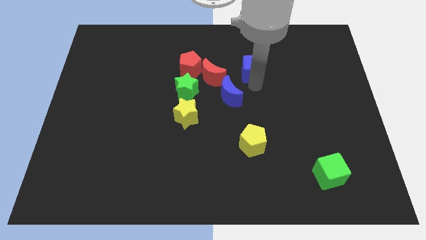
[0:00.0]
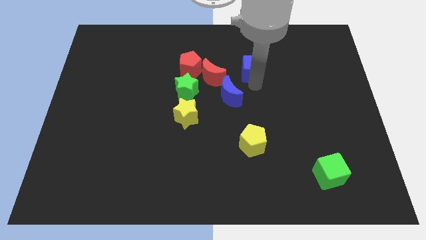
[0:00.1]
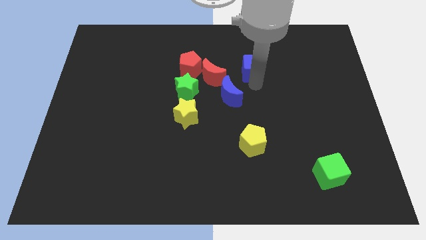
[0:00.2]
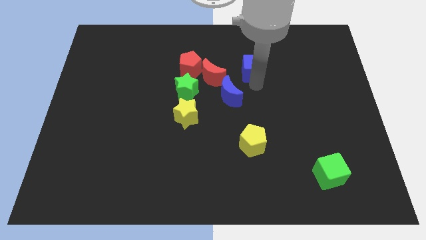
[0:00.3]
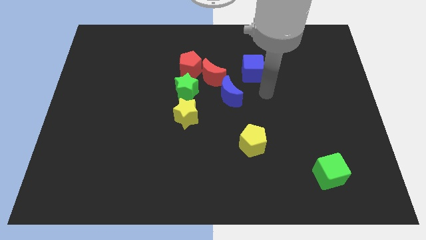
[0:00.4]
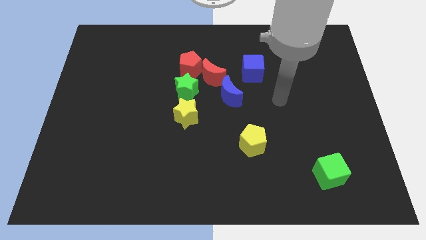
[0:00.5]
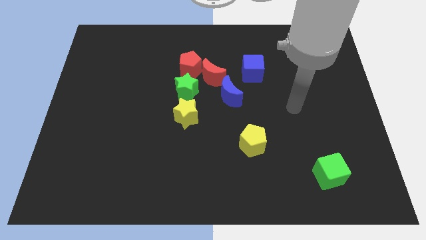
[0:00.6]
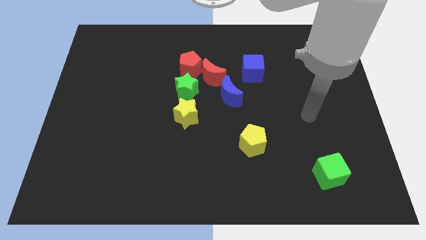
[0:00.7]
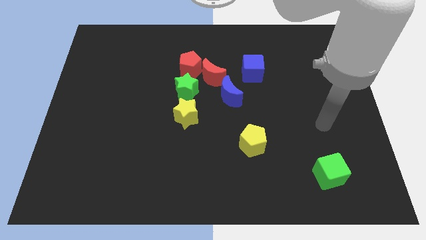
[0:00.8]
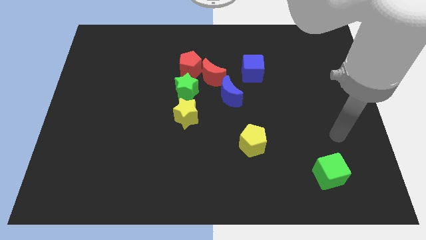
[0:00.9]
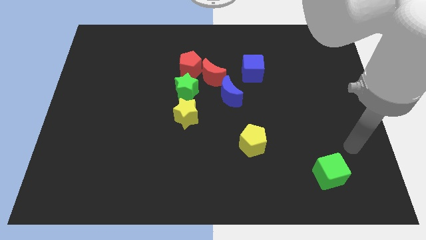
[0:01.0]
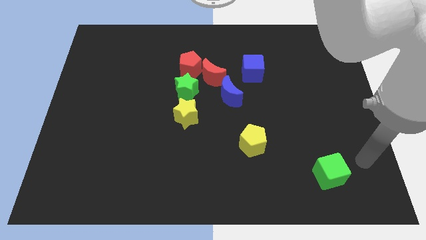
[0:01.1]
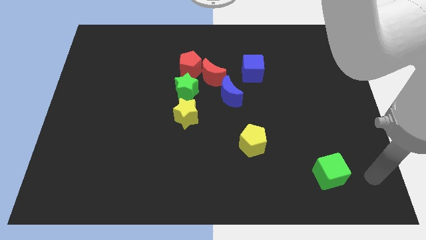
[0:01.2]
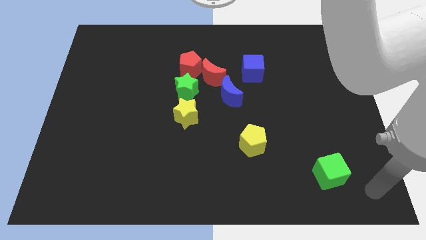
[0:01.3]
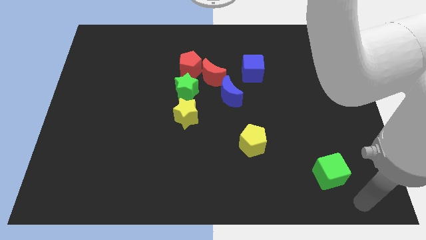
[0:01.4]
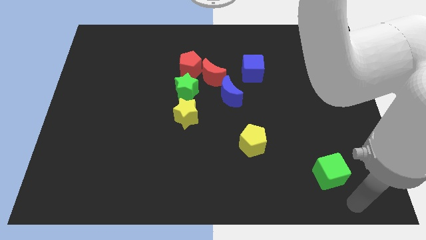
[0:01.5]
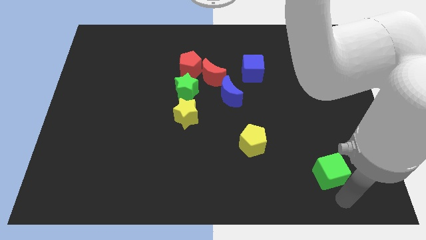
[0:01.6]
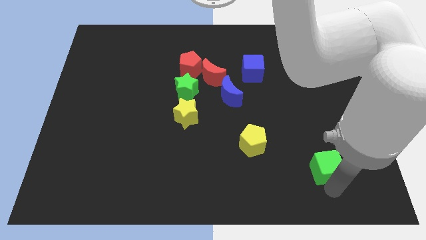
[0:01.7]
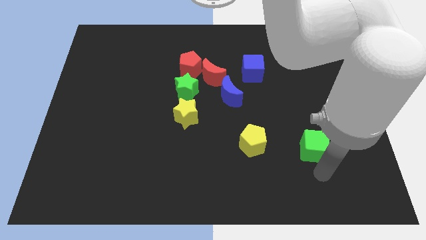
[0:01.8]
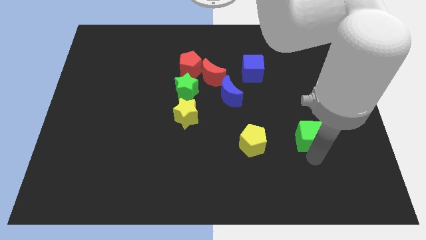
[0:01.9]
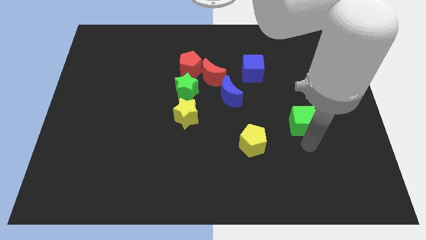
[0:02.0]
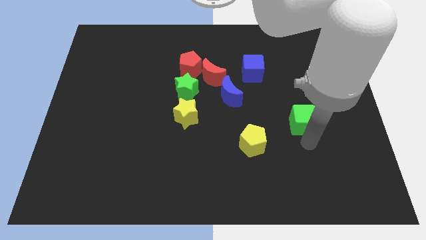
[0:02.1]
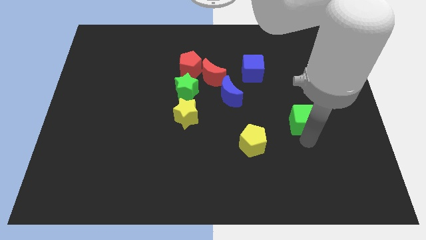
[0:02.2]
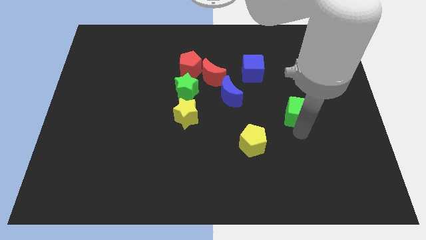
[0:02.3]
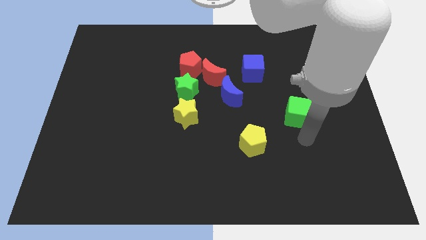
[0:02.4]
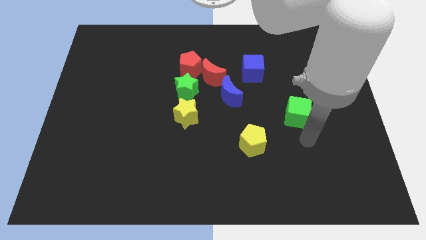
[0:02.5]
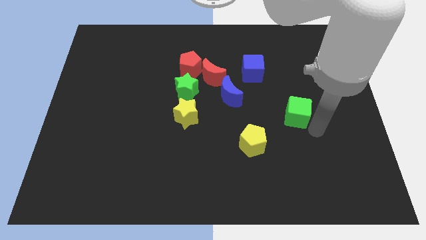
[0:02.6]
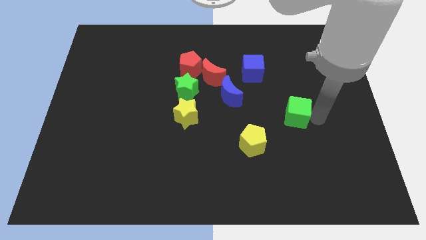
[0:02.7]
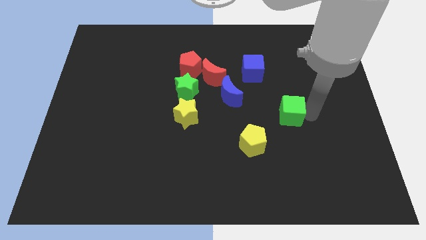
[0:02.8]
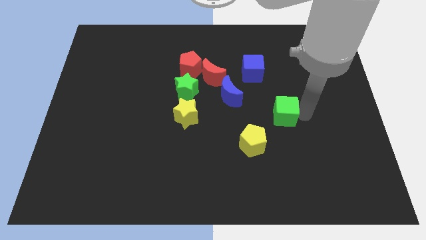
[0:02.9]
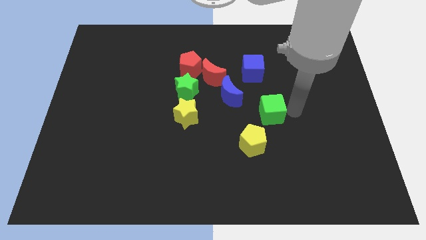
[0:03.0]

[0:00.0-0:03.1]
put the green cube parallel to the yellow star

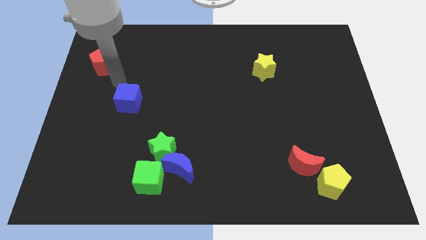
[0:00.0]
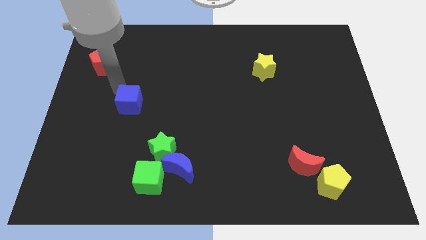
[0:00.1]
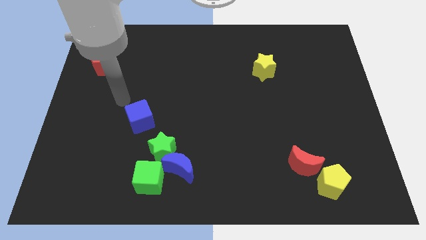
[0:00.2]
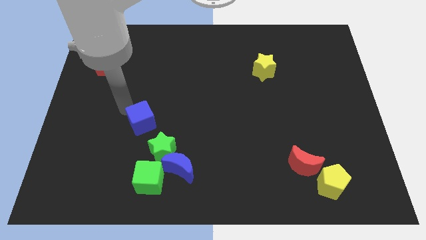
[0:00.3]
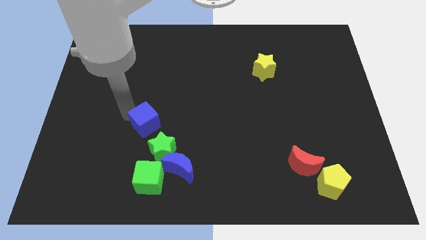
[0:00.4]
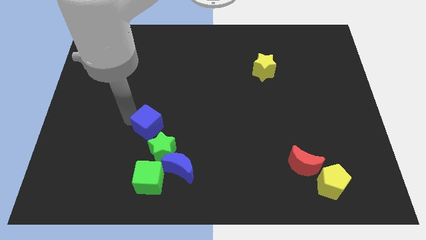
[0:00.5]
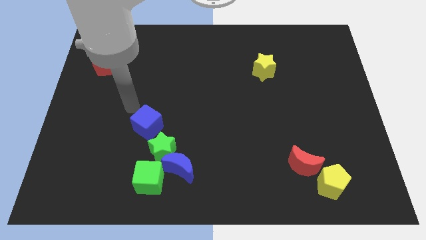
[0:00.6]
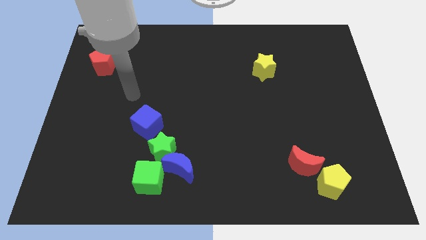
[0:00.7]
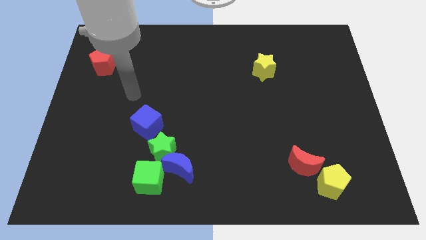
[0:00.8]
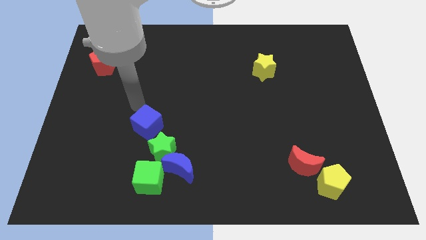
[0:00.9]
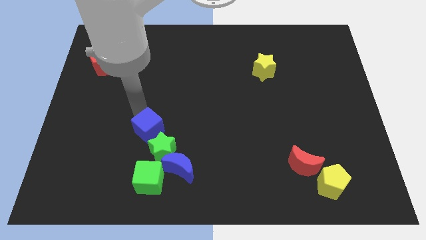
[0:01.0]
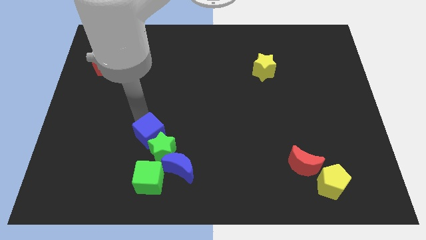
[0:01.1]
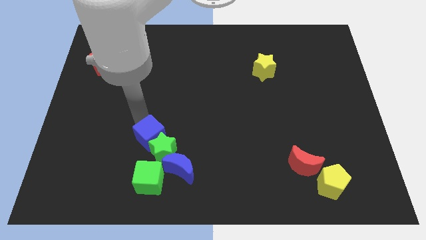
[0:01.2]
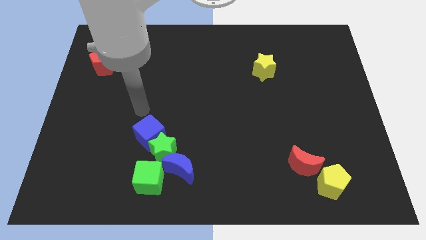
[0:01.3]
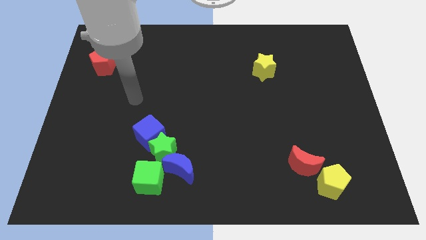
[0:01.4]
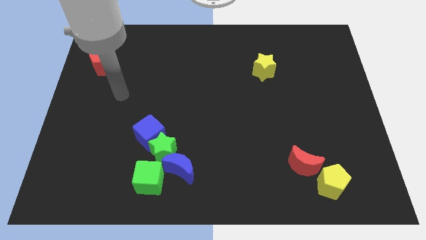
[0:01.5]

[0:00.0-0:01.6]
push the blue cube into the green star

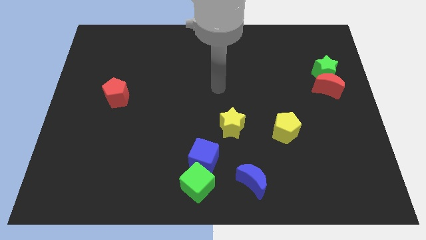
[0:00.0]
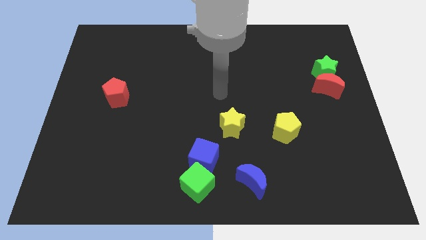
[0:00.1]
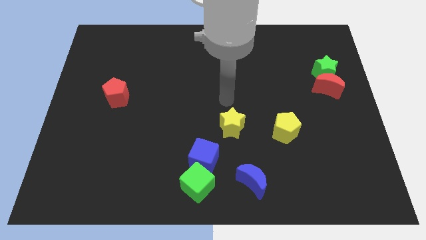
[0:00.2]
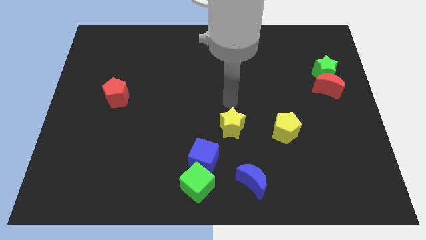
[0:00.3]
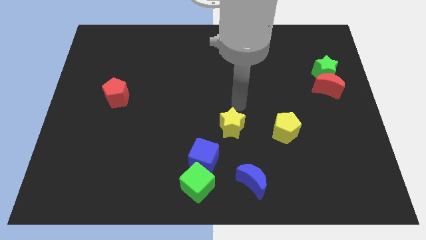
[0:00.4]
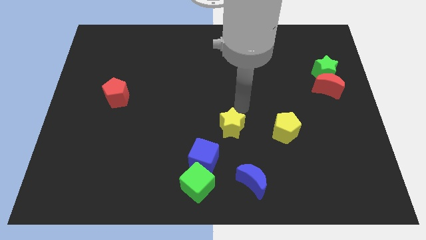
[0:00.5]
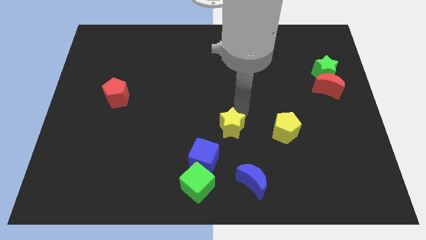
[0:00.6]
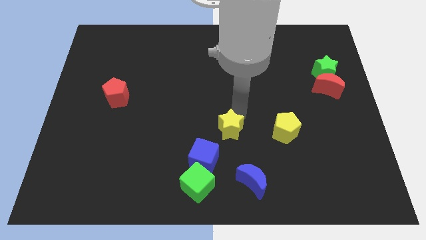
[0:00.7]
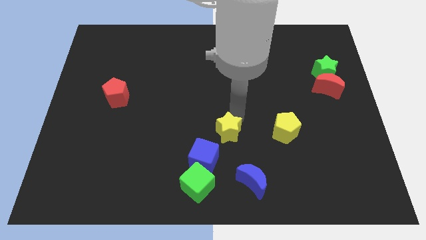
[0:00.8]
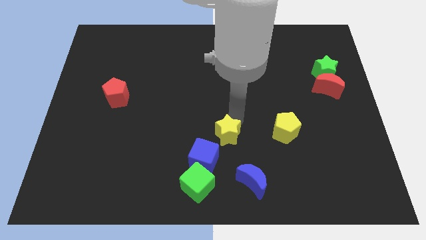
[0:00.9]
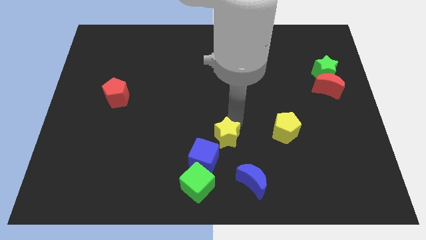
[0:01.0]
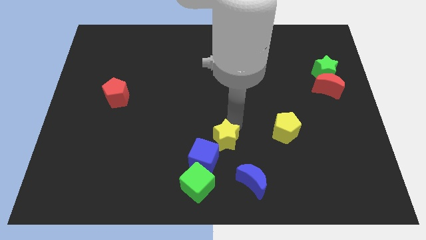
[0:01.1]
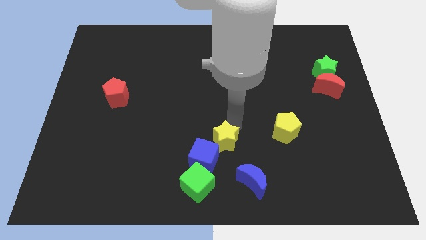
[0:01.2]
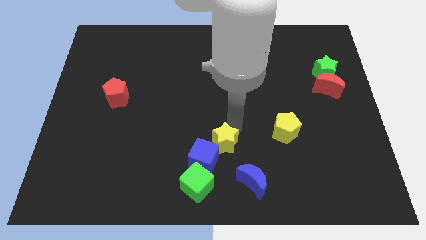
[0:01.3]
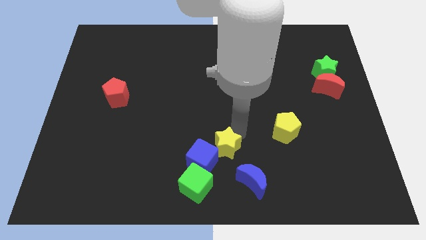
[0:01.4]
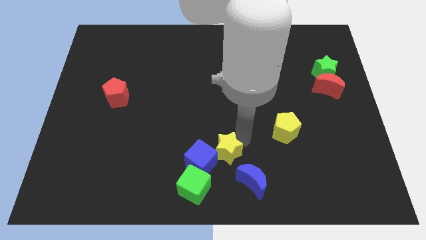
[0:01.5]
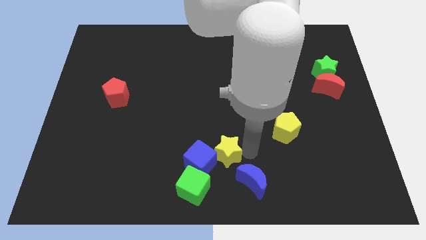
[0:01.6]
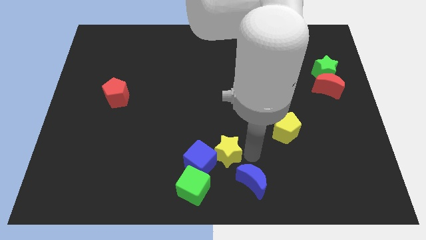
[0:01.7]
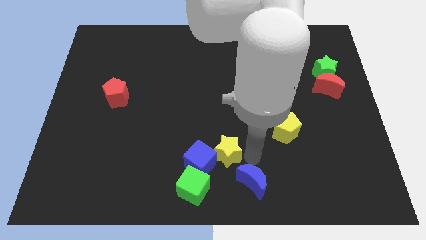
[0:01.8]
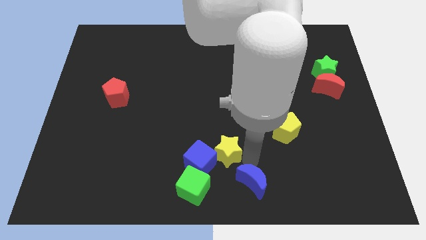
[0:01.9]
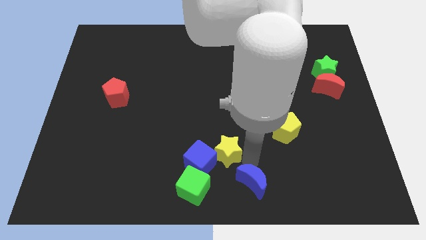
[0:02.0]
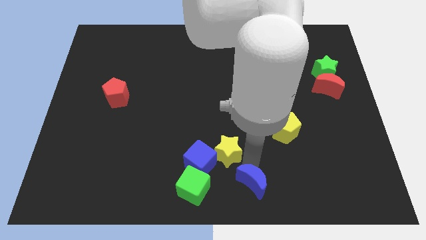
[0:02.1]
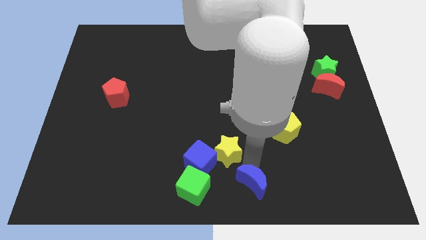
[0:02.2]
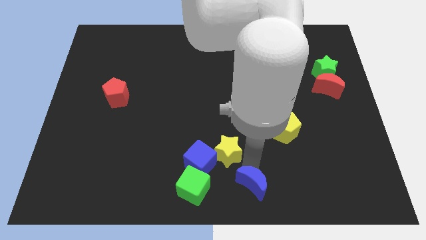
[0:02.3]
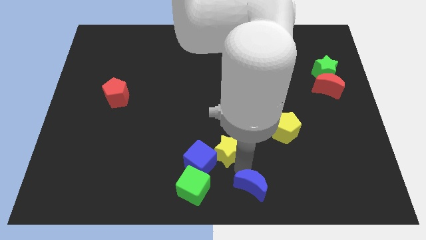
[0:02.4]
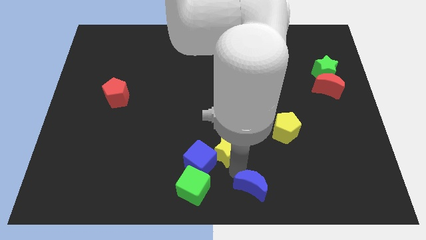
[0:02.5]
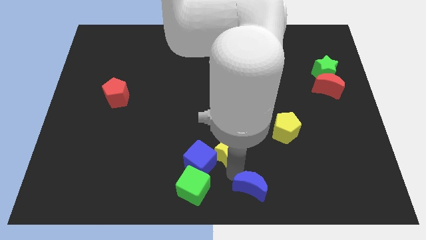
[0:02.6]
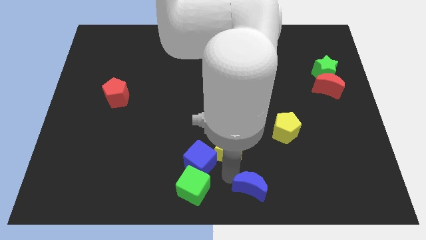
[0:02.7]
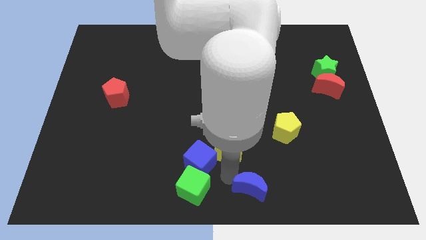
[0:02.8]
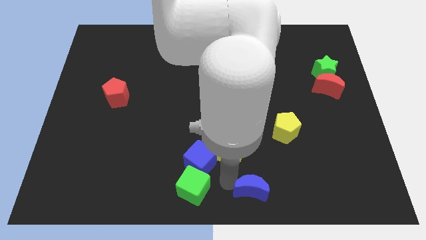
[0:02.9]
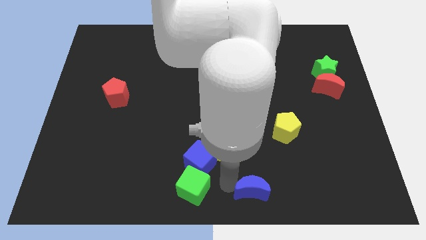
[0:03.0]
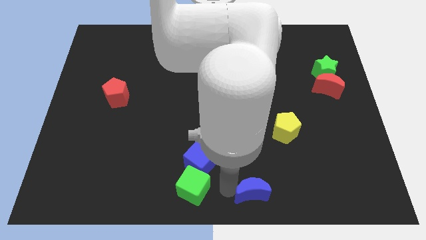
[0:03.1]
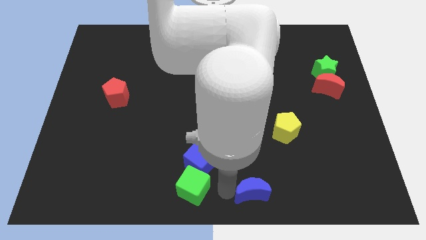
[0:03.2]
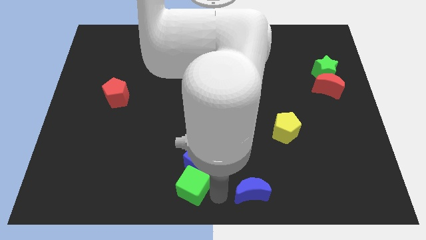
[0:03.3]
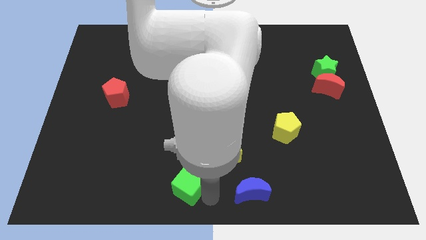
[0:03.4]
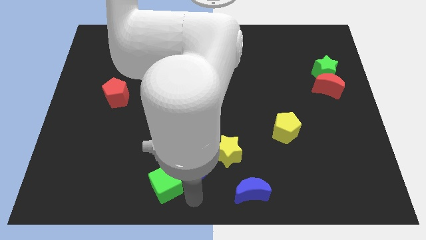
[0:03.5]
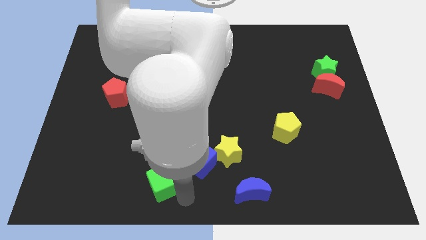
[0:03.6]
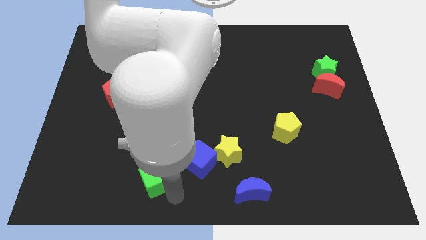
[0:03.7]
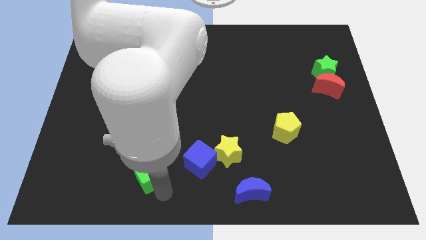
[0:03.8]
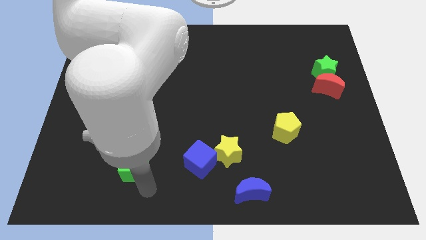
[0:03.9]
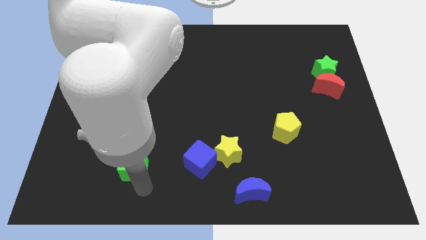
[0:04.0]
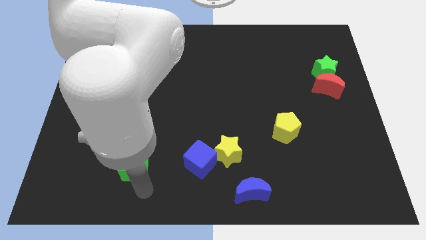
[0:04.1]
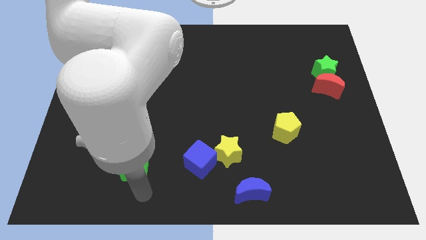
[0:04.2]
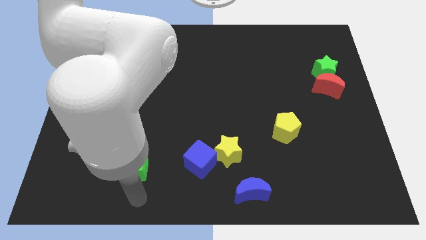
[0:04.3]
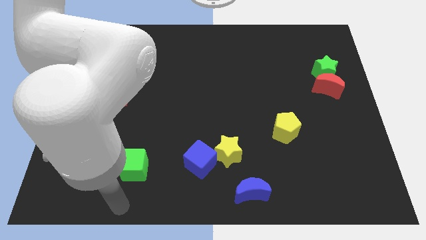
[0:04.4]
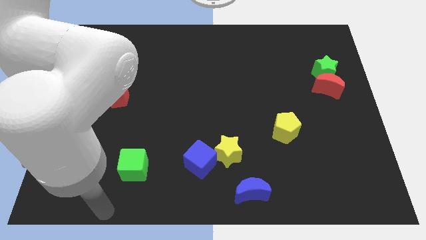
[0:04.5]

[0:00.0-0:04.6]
move the green star slightly left
